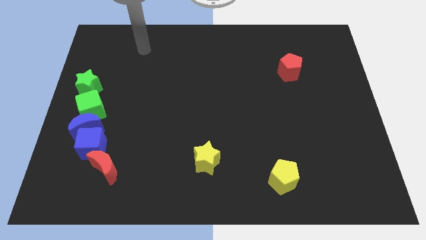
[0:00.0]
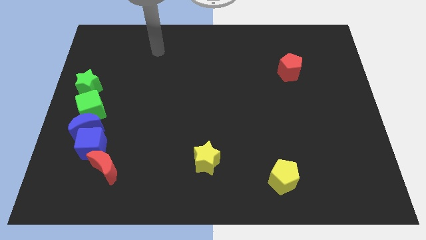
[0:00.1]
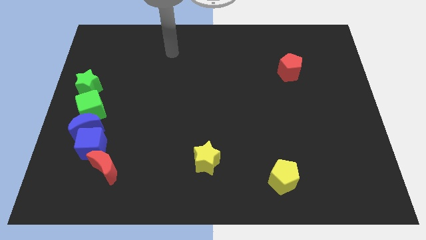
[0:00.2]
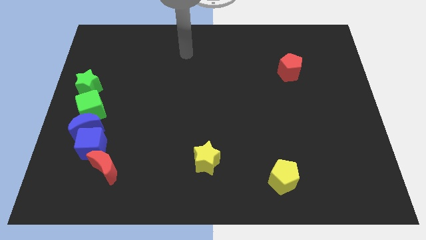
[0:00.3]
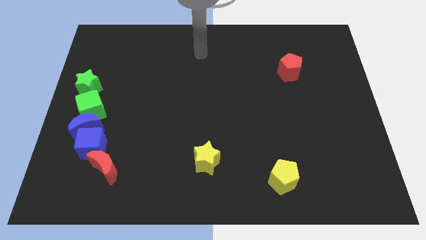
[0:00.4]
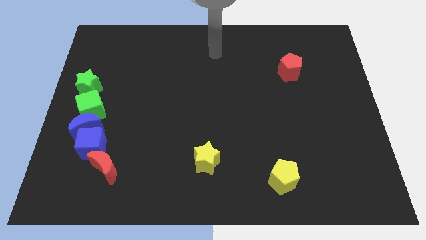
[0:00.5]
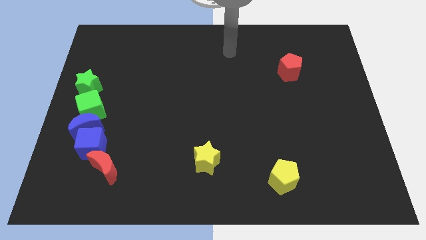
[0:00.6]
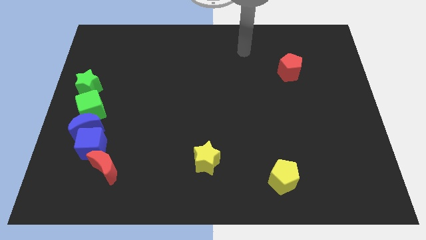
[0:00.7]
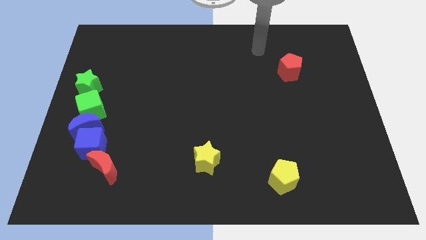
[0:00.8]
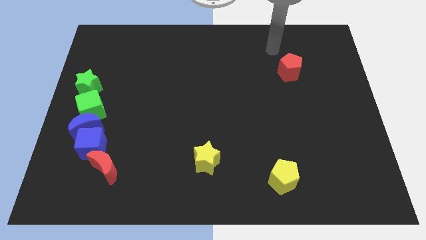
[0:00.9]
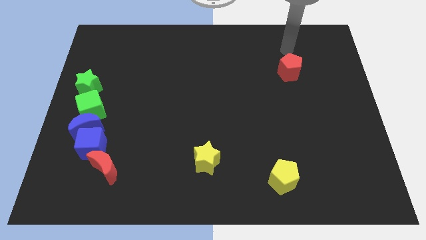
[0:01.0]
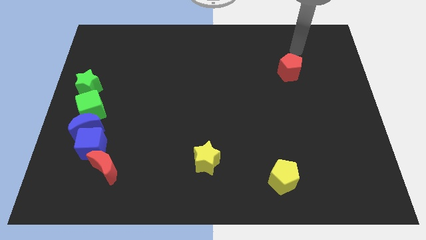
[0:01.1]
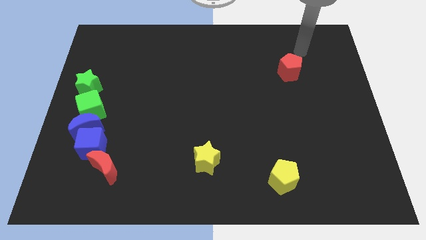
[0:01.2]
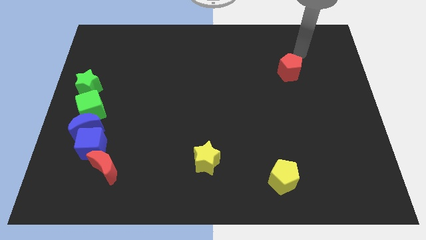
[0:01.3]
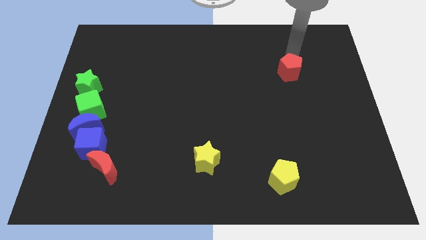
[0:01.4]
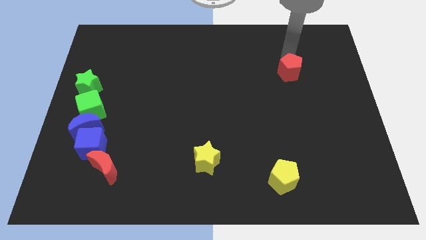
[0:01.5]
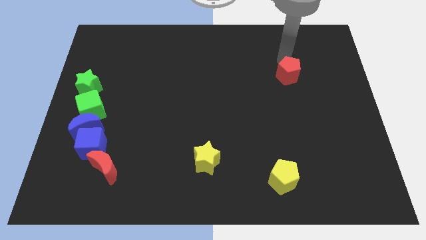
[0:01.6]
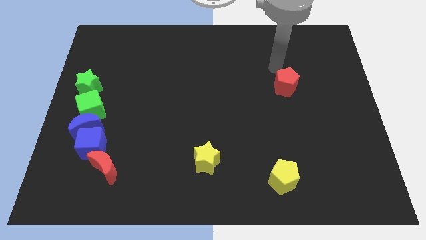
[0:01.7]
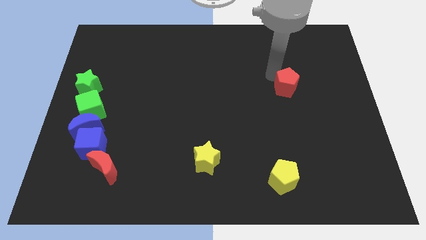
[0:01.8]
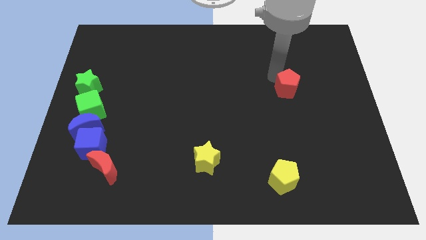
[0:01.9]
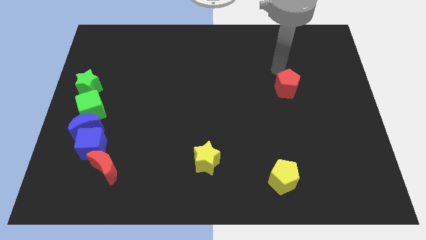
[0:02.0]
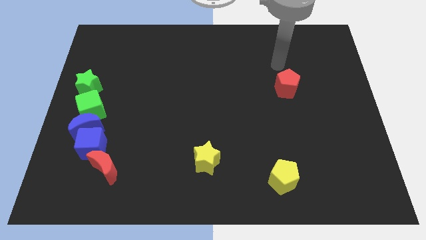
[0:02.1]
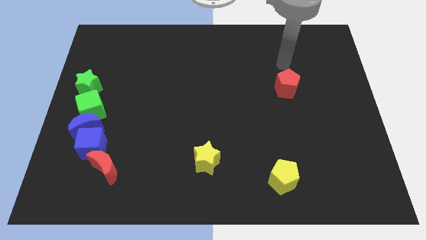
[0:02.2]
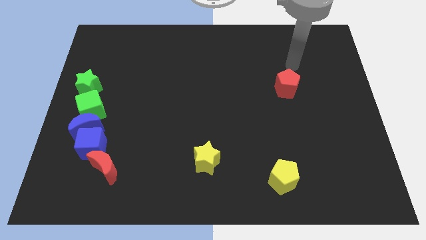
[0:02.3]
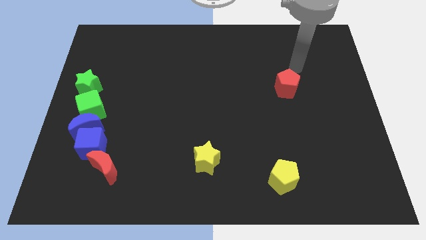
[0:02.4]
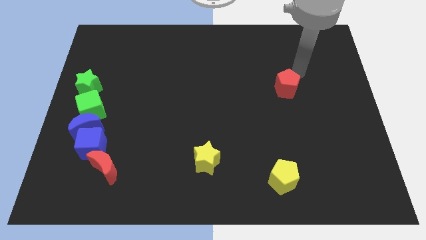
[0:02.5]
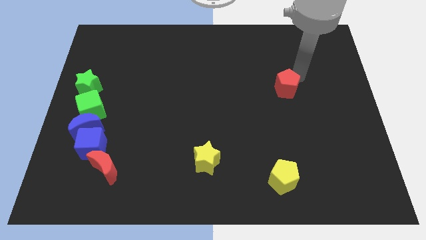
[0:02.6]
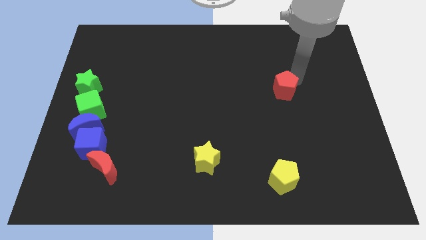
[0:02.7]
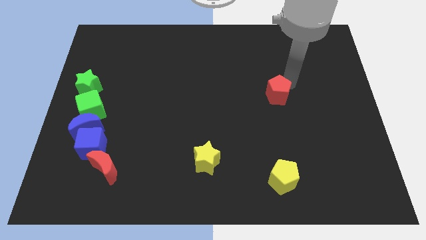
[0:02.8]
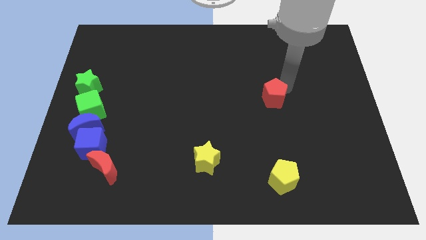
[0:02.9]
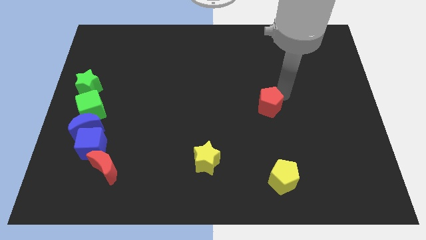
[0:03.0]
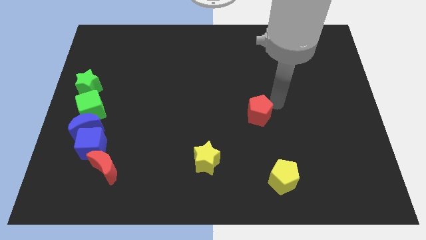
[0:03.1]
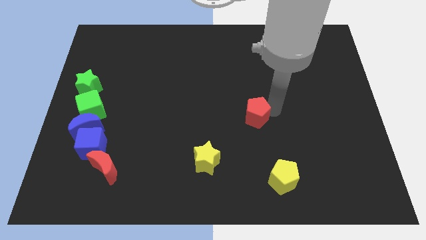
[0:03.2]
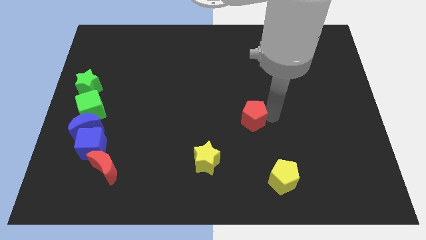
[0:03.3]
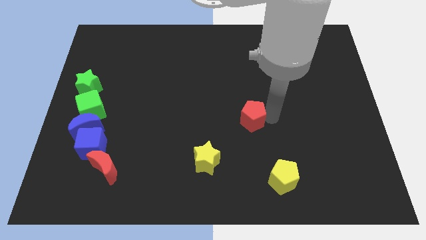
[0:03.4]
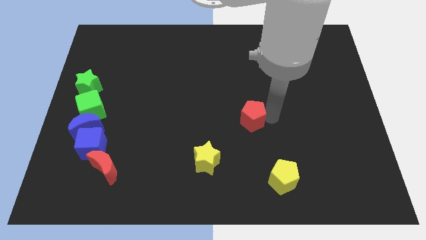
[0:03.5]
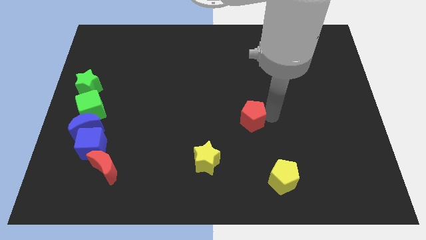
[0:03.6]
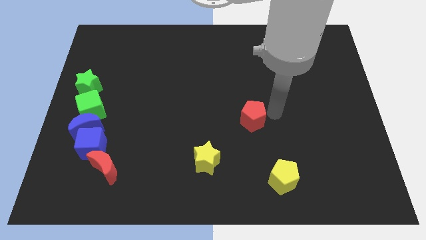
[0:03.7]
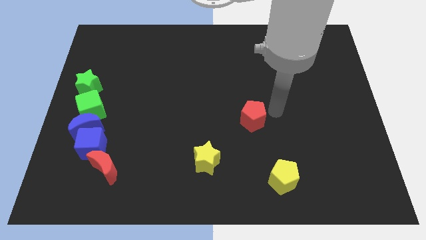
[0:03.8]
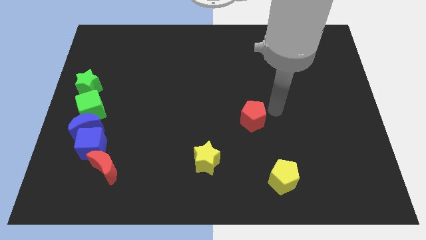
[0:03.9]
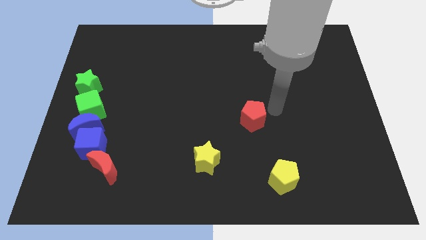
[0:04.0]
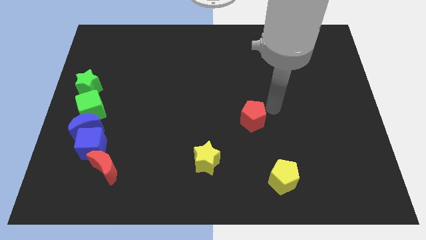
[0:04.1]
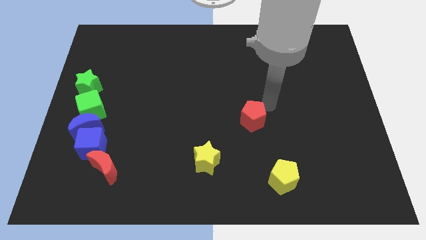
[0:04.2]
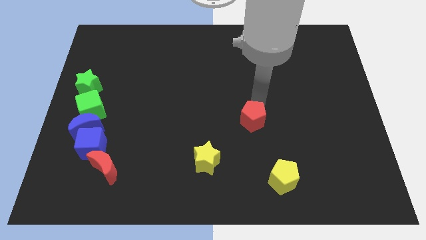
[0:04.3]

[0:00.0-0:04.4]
push the red pentagon towards bottom to form a triangle with yellow star and yellow pentagon

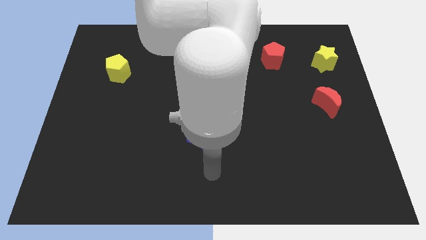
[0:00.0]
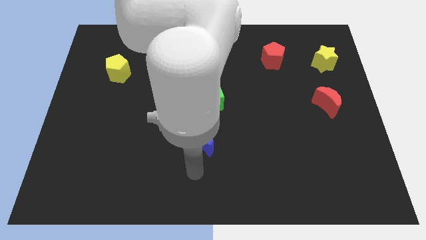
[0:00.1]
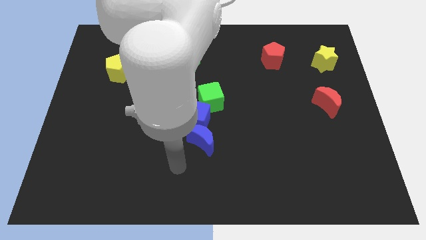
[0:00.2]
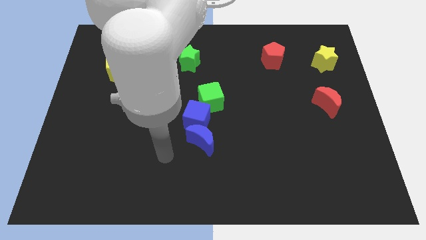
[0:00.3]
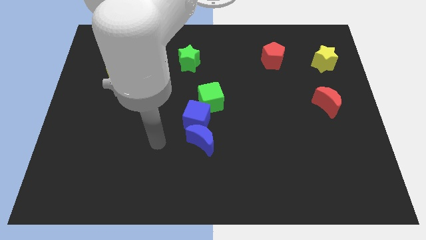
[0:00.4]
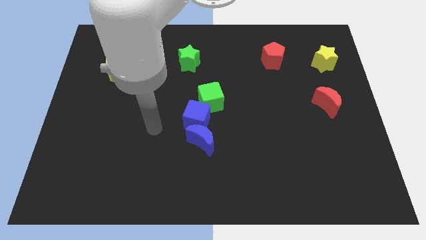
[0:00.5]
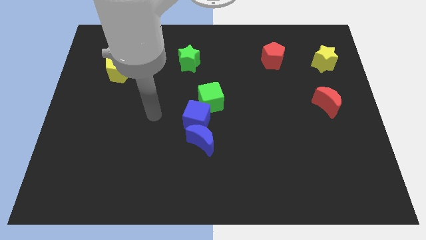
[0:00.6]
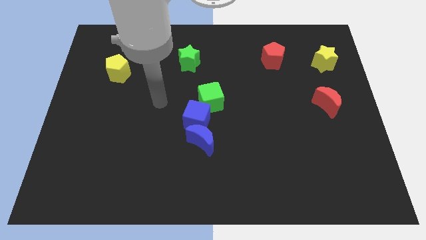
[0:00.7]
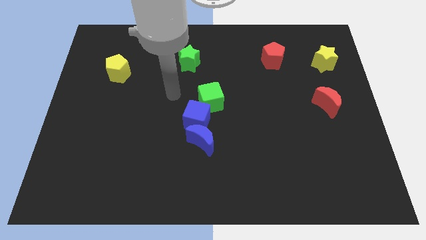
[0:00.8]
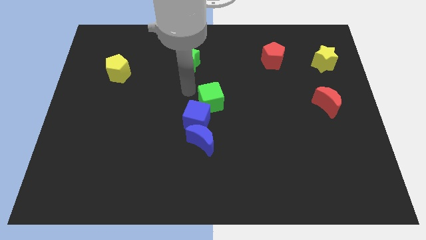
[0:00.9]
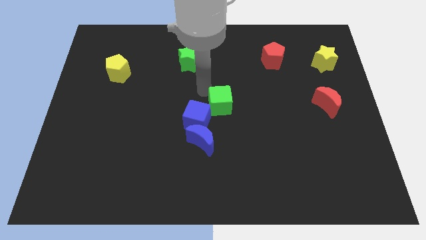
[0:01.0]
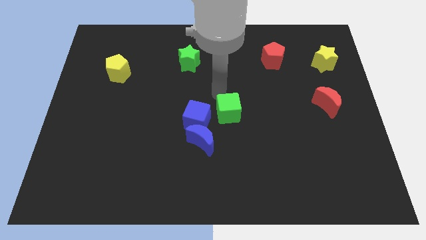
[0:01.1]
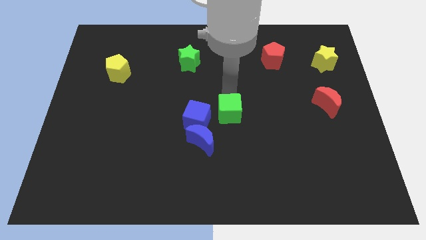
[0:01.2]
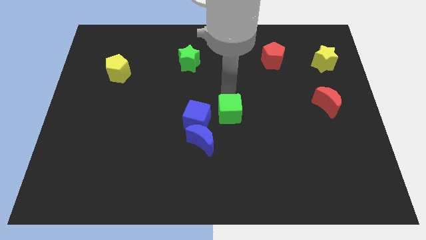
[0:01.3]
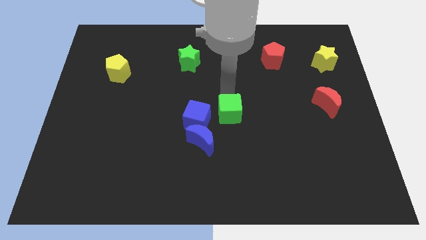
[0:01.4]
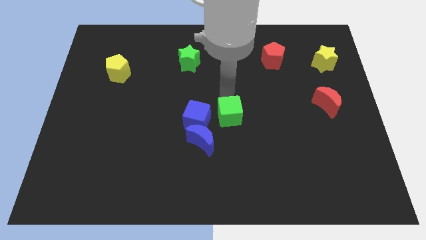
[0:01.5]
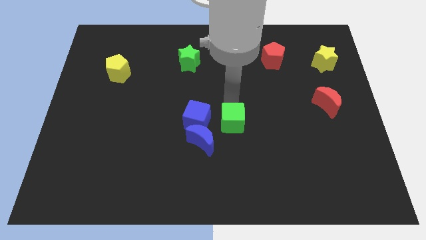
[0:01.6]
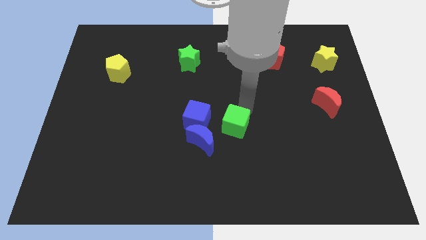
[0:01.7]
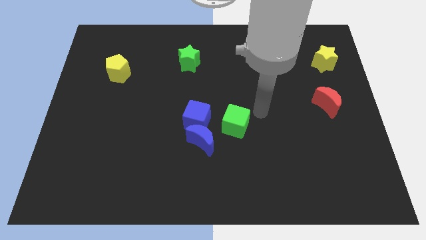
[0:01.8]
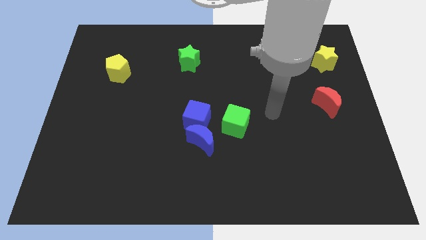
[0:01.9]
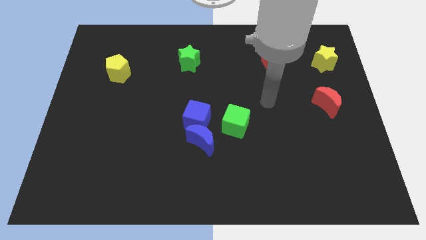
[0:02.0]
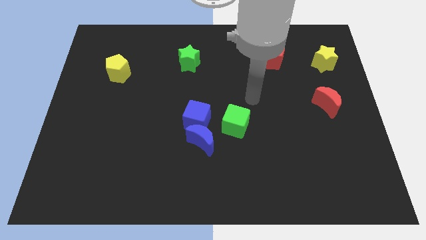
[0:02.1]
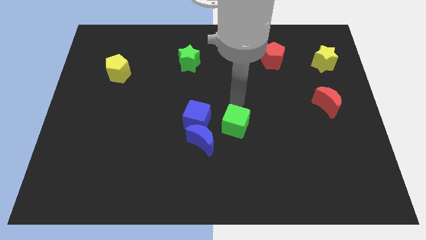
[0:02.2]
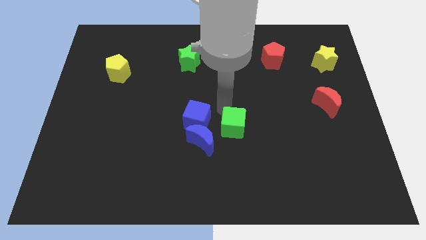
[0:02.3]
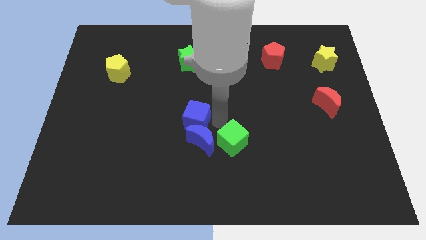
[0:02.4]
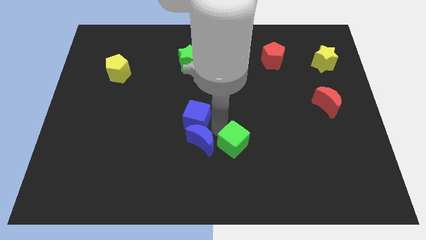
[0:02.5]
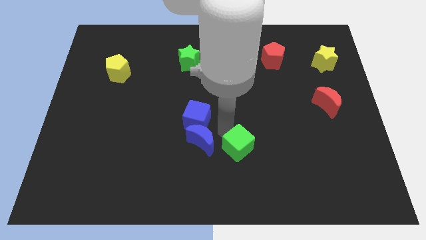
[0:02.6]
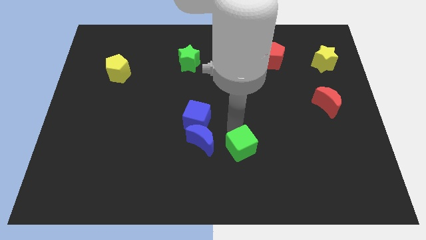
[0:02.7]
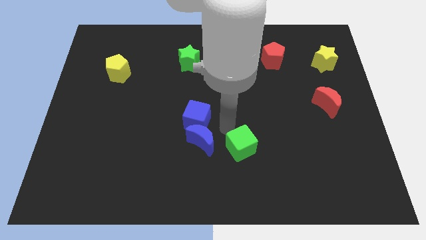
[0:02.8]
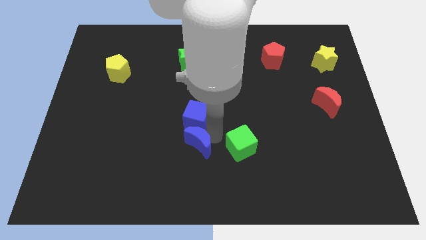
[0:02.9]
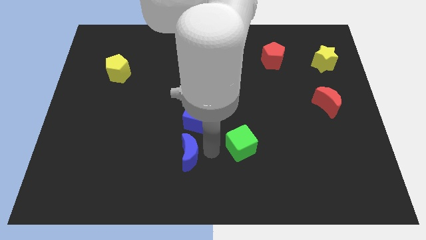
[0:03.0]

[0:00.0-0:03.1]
push the green cube towards blue crescent

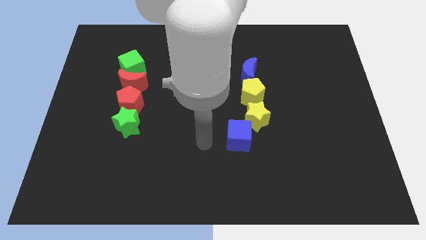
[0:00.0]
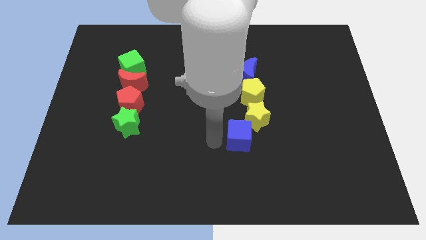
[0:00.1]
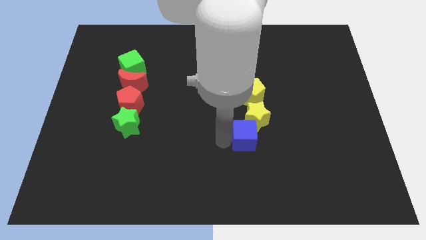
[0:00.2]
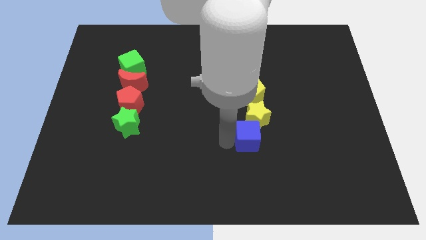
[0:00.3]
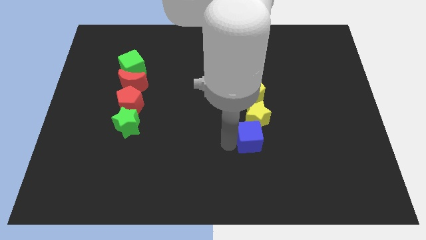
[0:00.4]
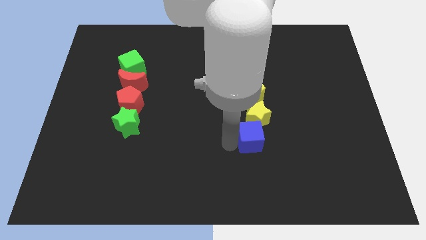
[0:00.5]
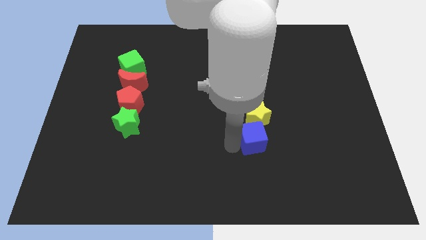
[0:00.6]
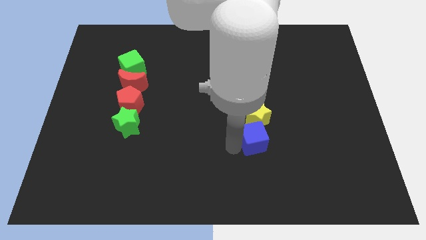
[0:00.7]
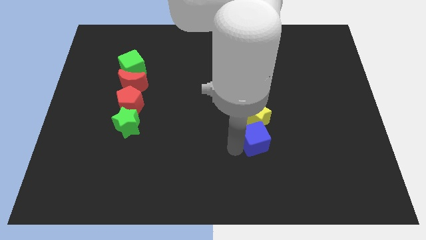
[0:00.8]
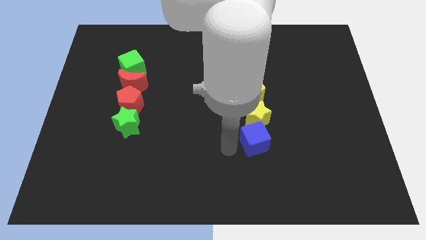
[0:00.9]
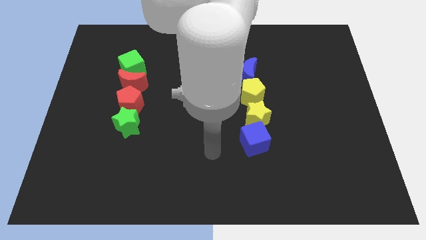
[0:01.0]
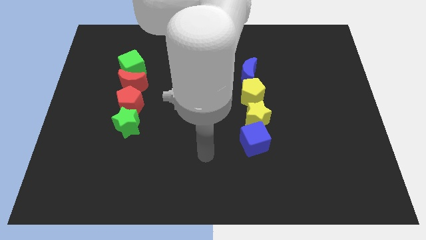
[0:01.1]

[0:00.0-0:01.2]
move the blue cube below the yellow star

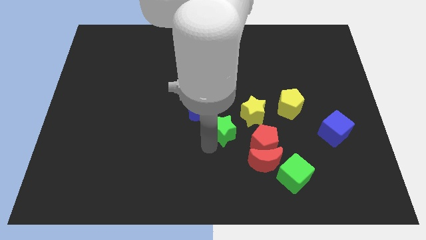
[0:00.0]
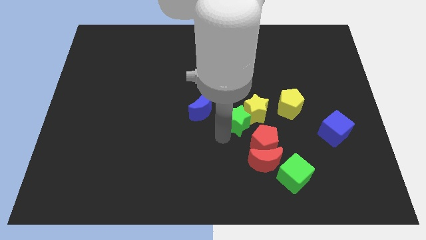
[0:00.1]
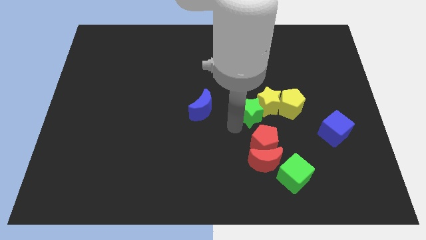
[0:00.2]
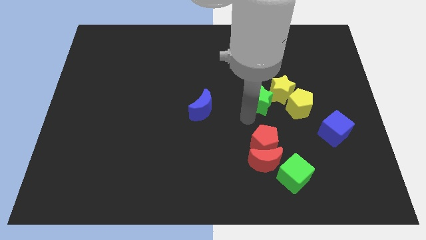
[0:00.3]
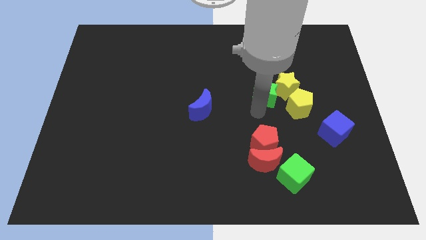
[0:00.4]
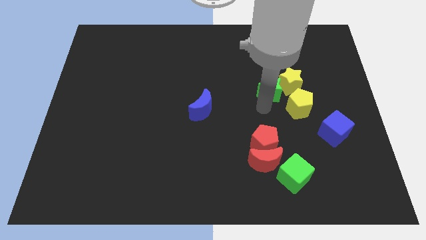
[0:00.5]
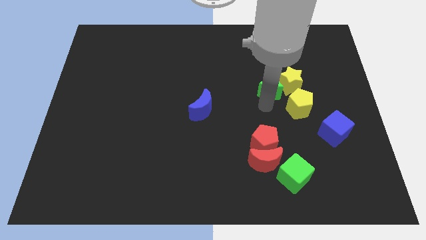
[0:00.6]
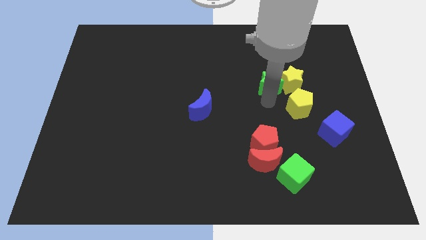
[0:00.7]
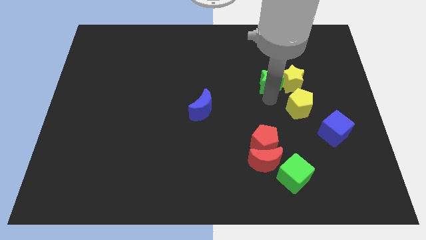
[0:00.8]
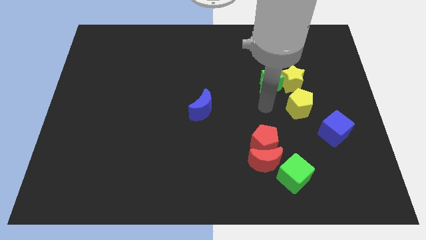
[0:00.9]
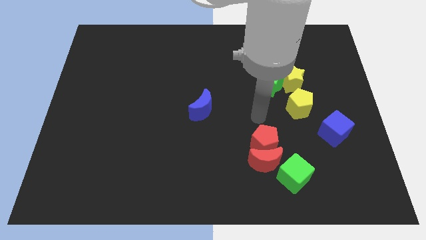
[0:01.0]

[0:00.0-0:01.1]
slide green star into yellow star
